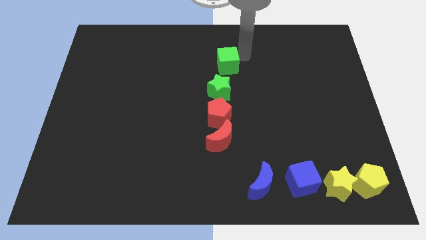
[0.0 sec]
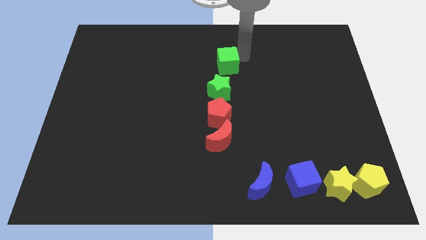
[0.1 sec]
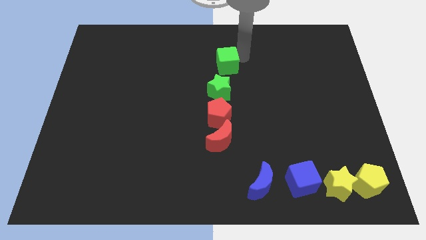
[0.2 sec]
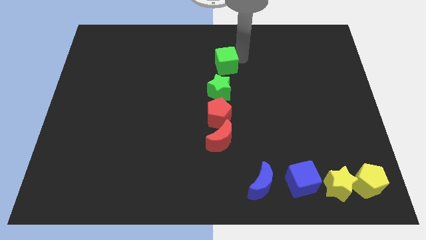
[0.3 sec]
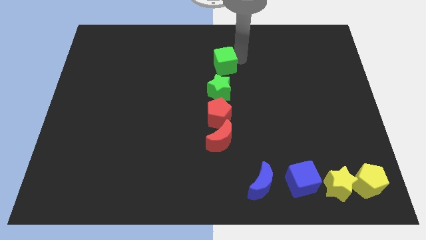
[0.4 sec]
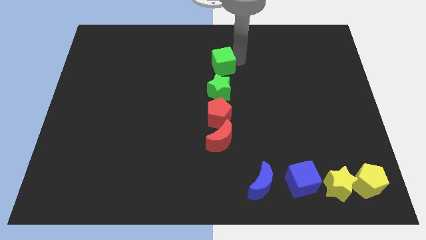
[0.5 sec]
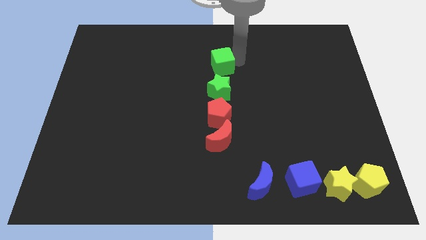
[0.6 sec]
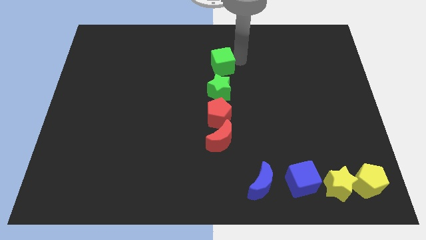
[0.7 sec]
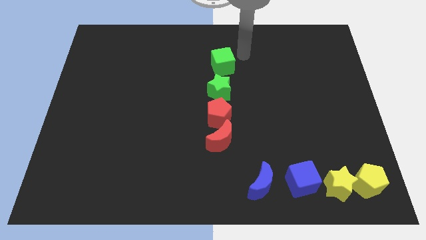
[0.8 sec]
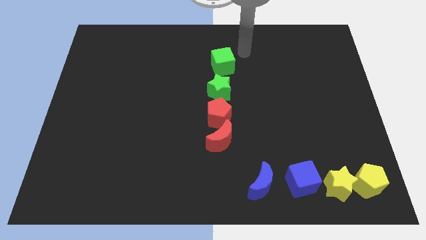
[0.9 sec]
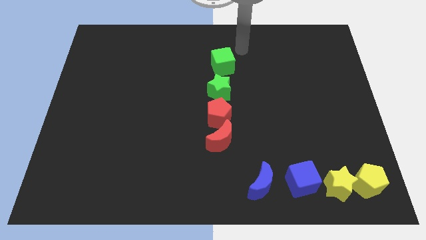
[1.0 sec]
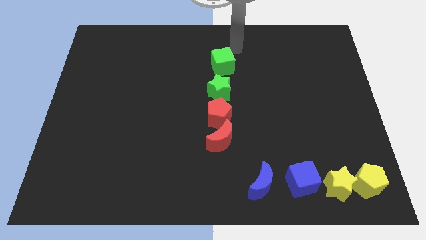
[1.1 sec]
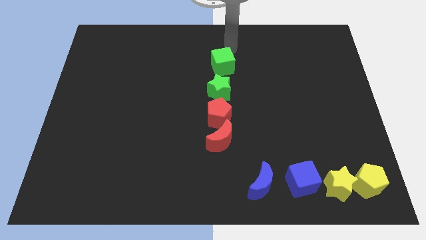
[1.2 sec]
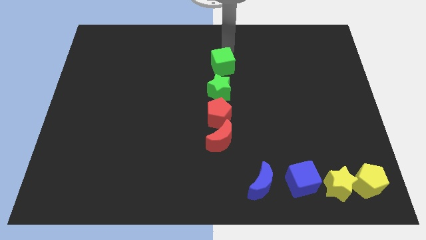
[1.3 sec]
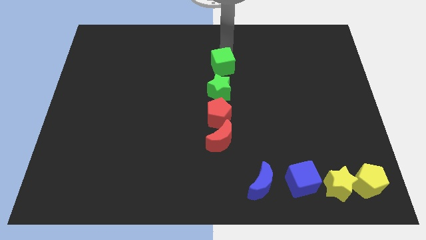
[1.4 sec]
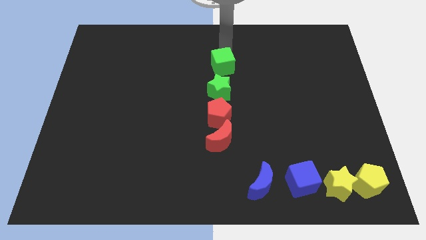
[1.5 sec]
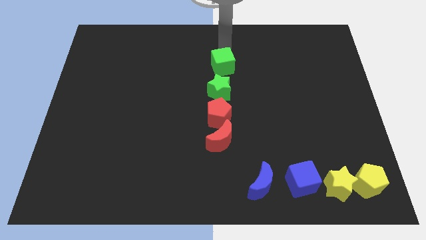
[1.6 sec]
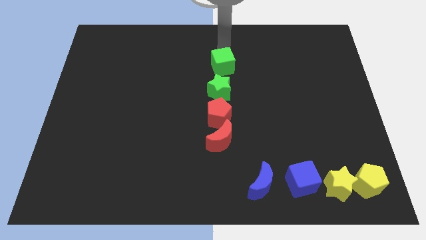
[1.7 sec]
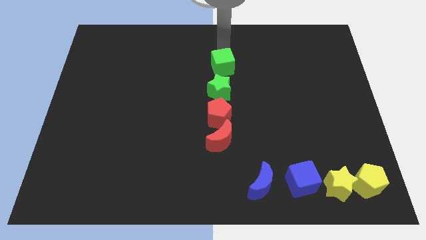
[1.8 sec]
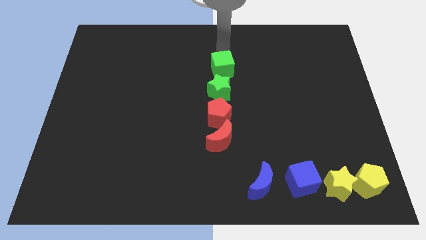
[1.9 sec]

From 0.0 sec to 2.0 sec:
slightly push the green cube to the center

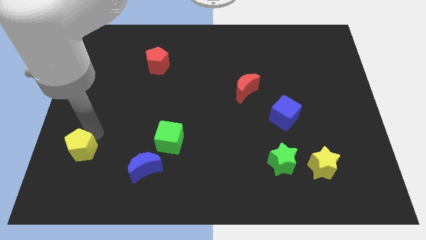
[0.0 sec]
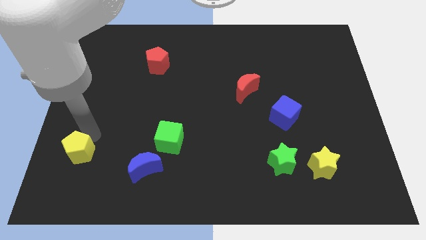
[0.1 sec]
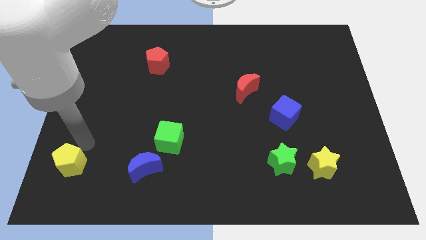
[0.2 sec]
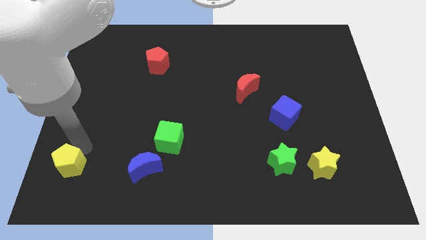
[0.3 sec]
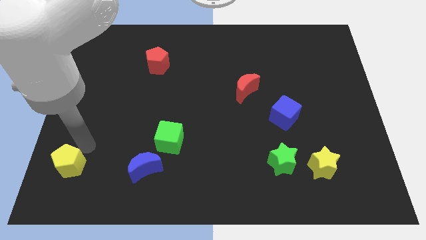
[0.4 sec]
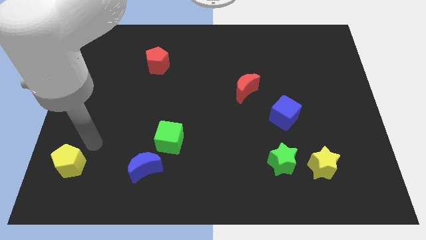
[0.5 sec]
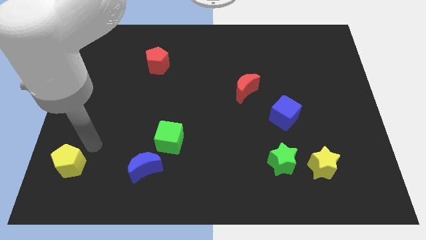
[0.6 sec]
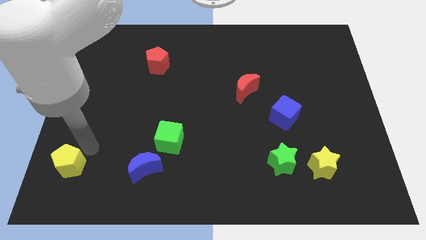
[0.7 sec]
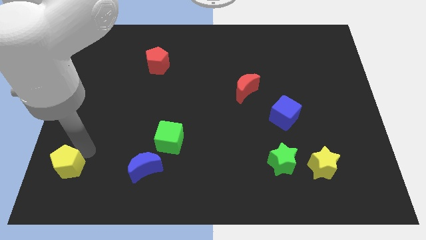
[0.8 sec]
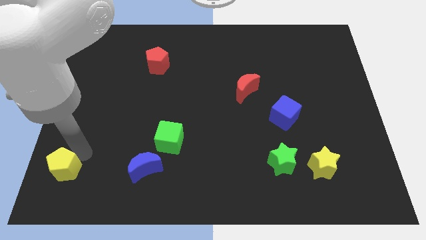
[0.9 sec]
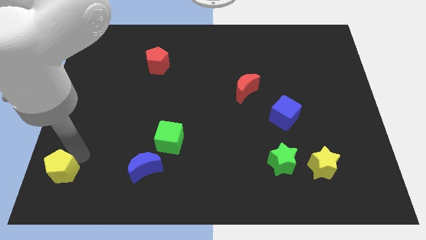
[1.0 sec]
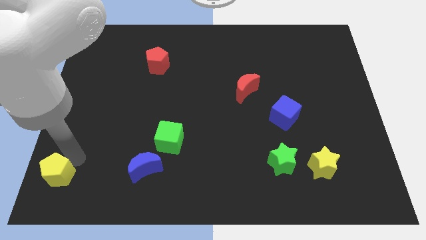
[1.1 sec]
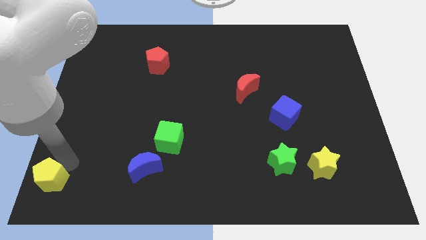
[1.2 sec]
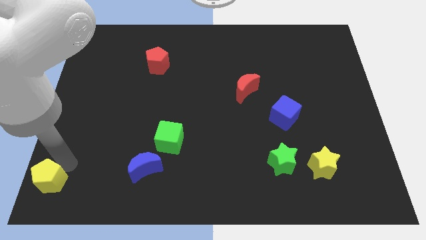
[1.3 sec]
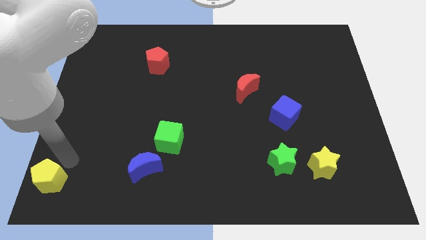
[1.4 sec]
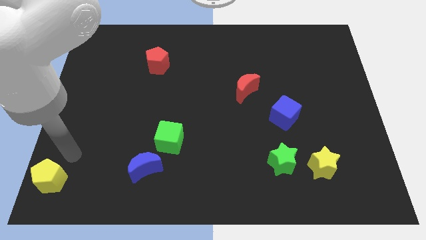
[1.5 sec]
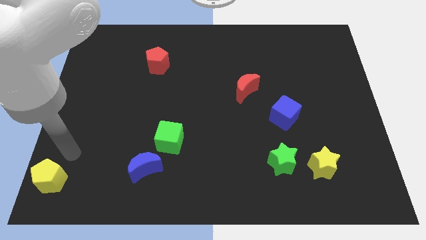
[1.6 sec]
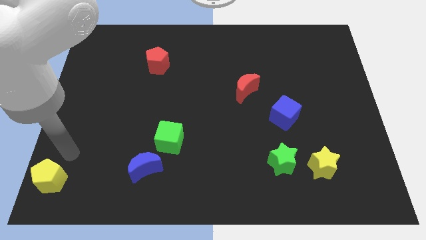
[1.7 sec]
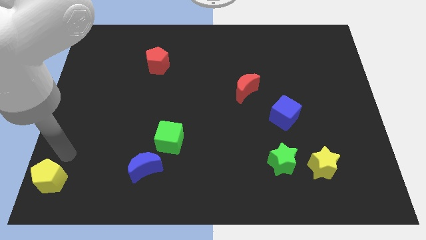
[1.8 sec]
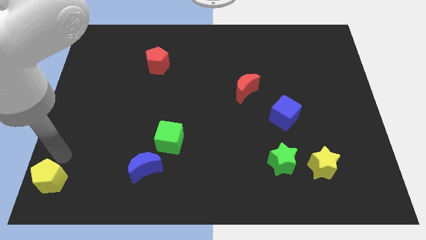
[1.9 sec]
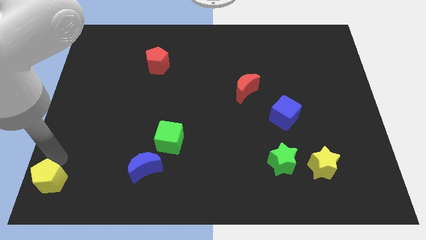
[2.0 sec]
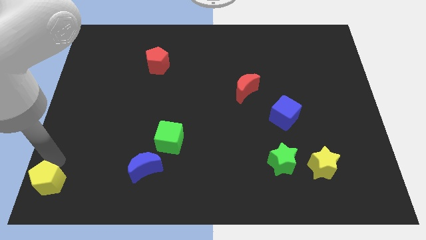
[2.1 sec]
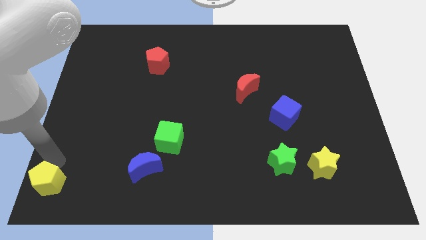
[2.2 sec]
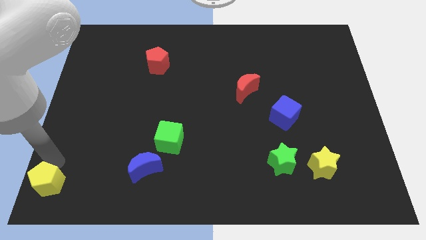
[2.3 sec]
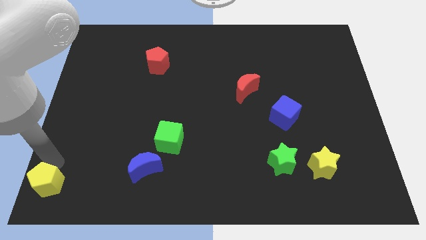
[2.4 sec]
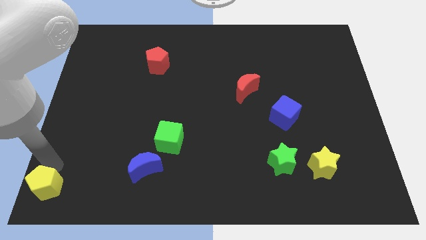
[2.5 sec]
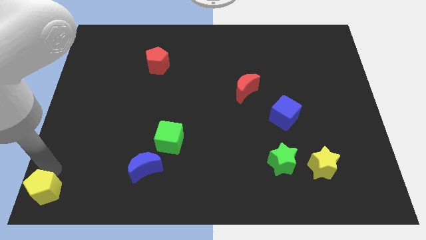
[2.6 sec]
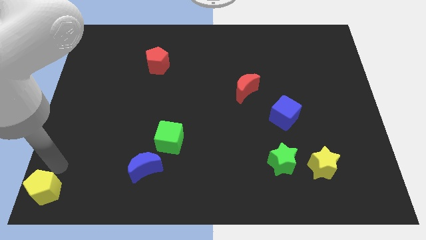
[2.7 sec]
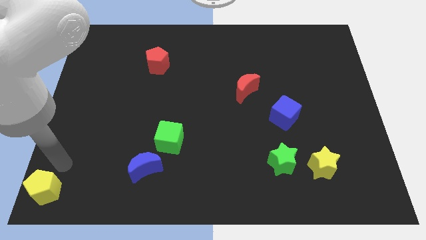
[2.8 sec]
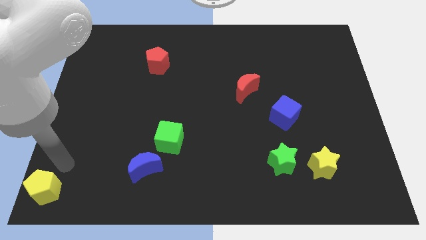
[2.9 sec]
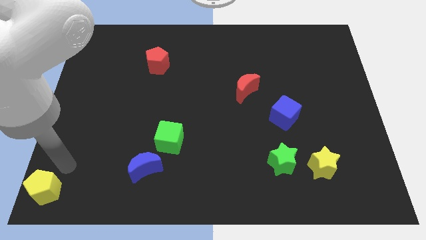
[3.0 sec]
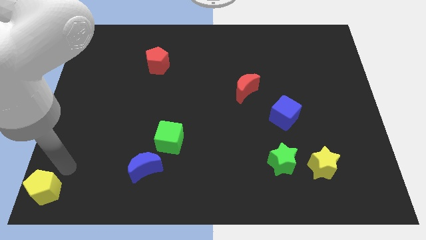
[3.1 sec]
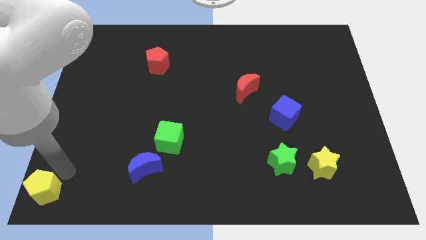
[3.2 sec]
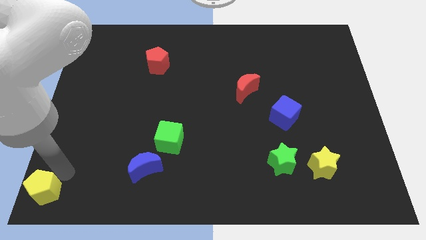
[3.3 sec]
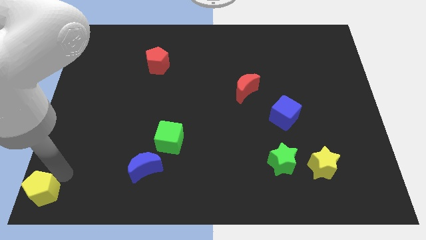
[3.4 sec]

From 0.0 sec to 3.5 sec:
push yellow pentagon to the bottom left corner

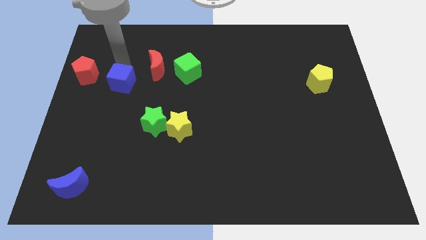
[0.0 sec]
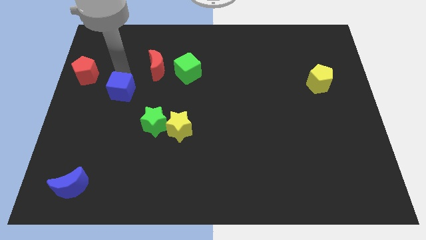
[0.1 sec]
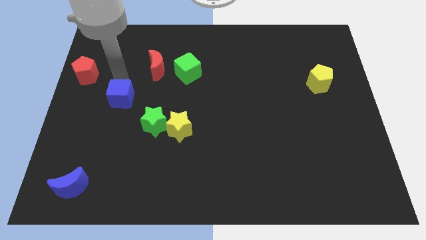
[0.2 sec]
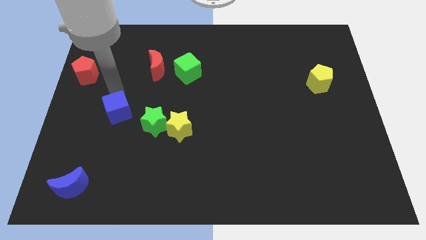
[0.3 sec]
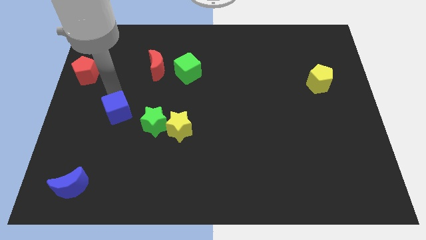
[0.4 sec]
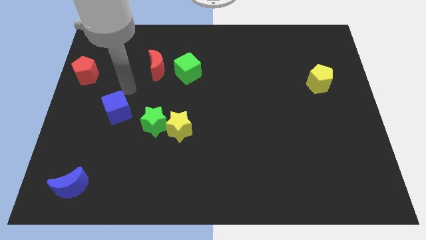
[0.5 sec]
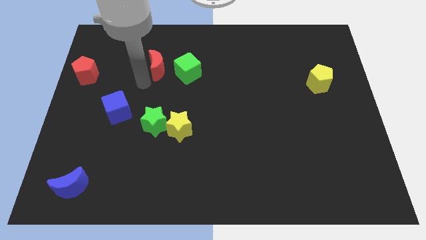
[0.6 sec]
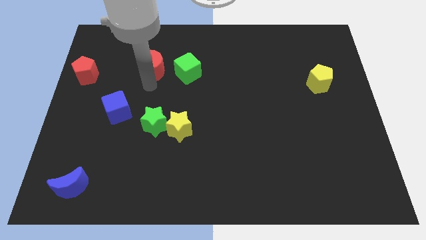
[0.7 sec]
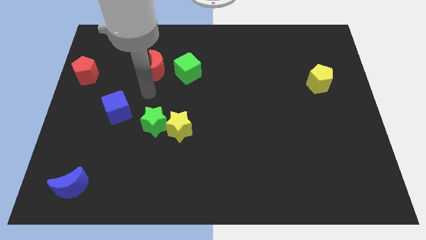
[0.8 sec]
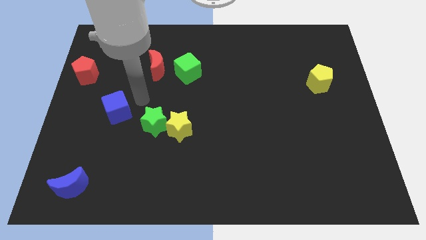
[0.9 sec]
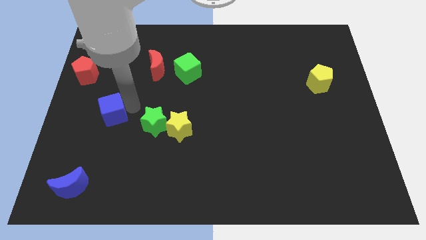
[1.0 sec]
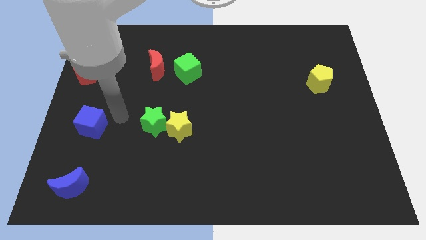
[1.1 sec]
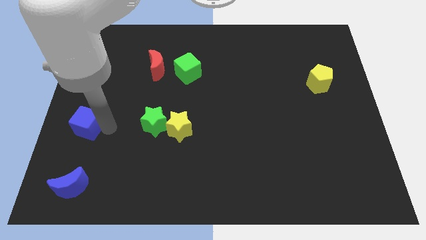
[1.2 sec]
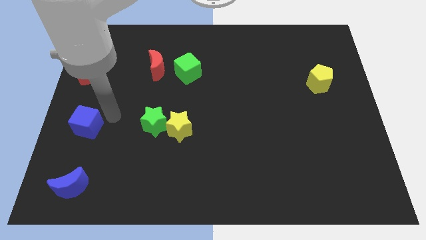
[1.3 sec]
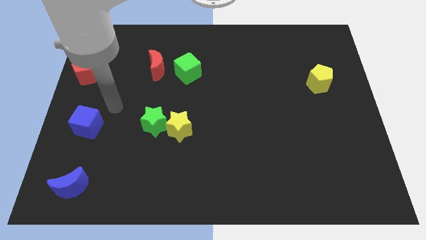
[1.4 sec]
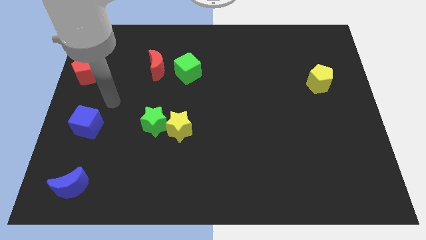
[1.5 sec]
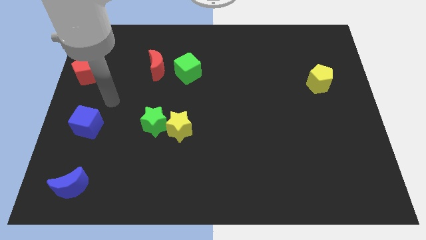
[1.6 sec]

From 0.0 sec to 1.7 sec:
slide blue cube horizontal to green star

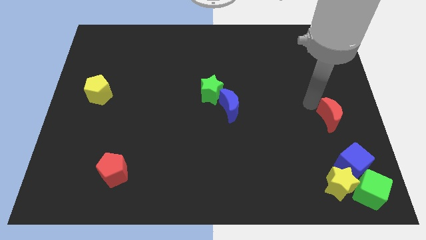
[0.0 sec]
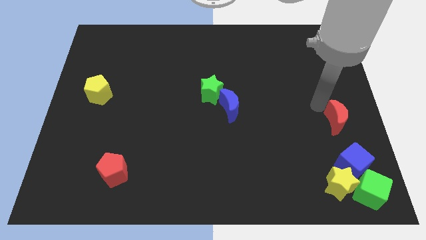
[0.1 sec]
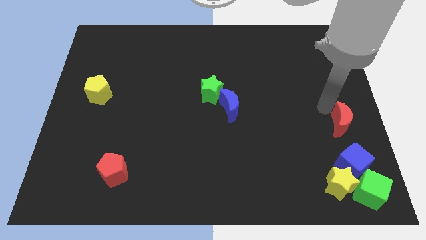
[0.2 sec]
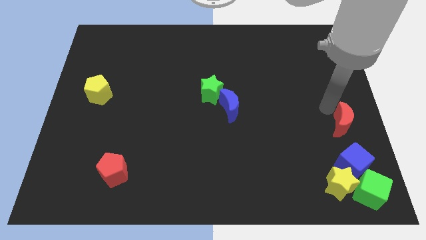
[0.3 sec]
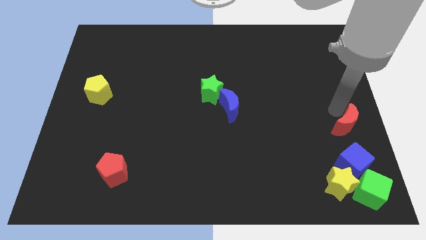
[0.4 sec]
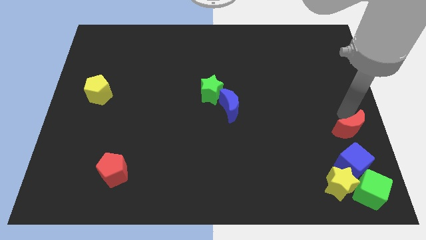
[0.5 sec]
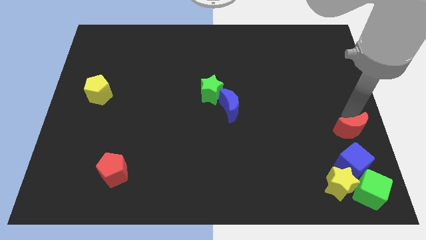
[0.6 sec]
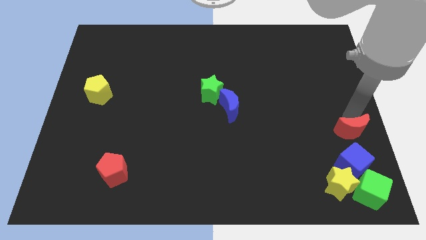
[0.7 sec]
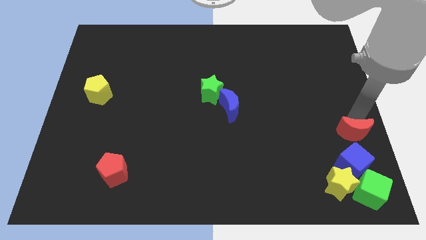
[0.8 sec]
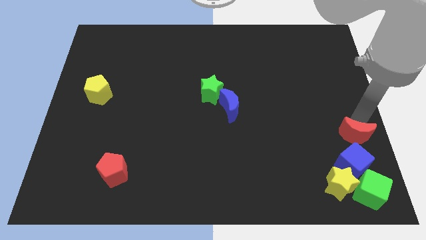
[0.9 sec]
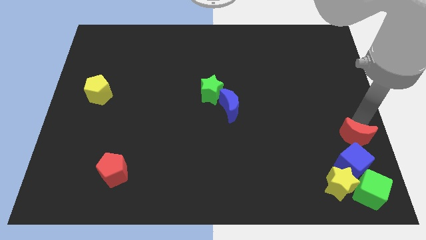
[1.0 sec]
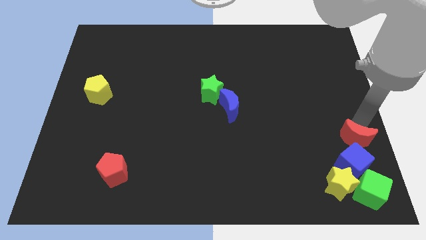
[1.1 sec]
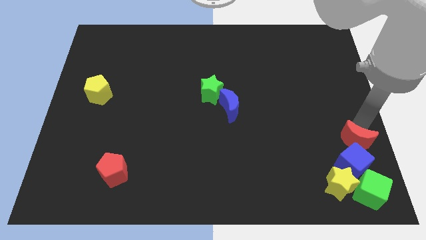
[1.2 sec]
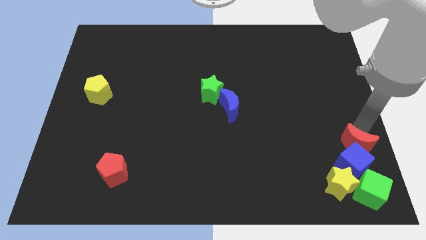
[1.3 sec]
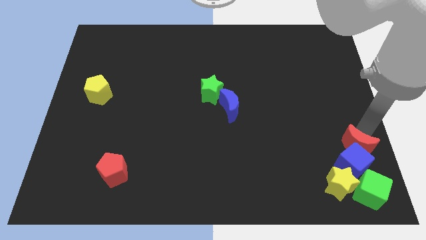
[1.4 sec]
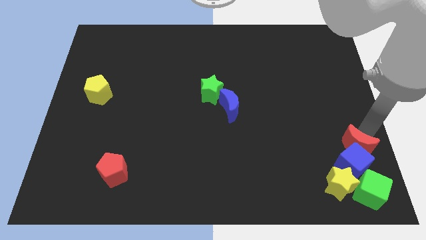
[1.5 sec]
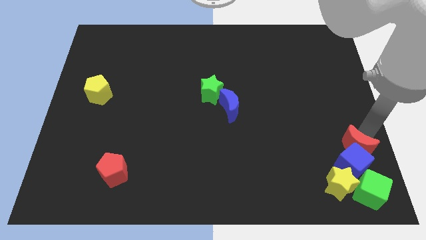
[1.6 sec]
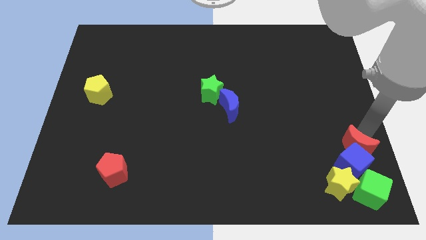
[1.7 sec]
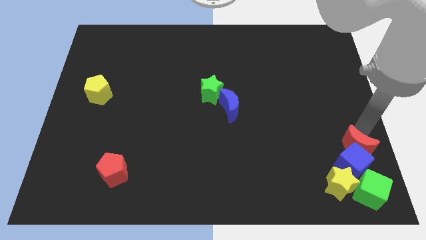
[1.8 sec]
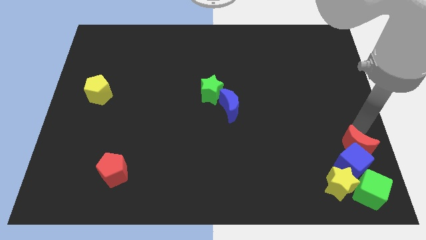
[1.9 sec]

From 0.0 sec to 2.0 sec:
slide the red crescent towards the blue cube
